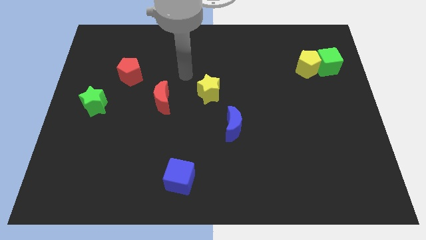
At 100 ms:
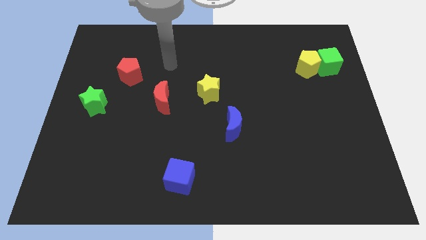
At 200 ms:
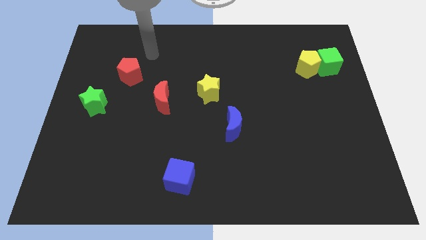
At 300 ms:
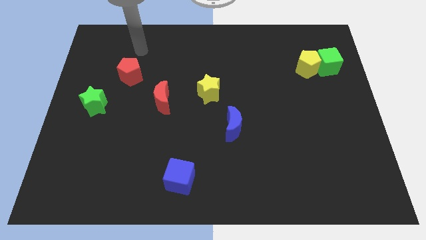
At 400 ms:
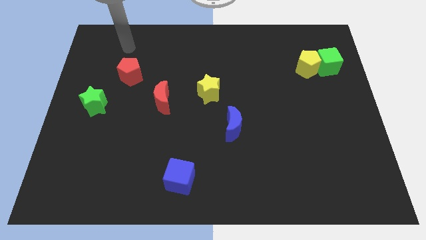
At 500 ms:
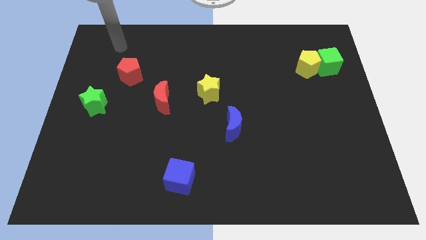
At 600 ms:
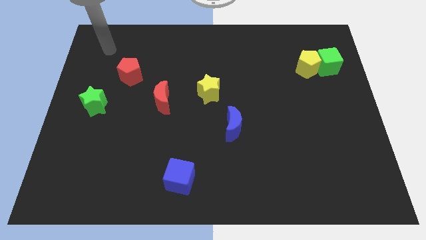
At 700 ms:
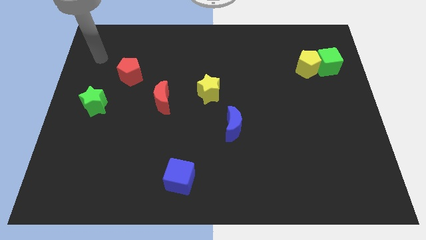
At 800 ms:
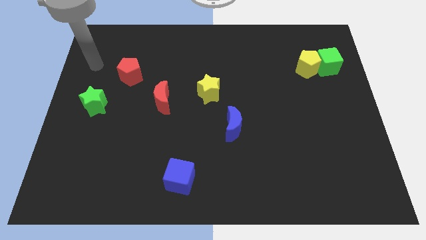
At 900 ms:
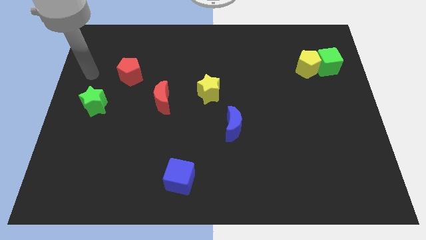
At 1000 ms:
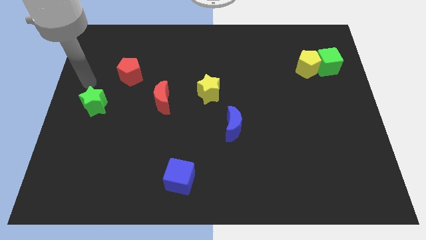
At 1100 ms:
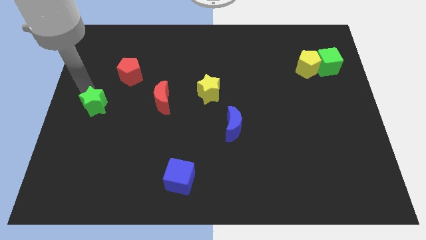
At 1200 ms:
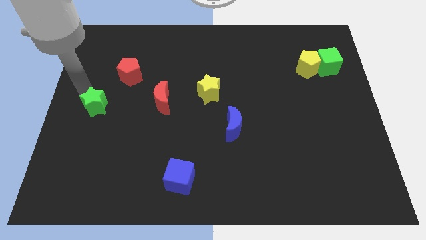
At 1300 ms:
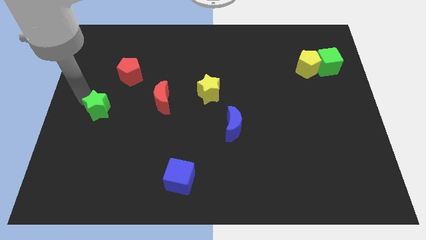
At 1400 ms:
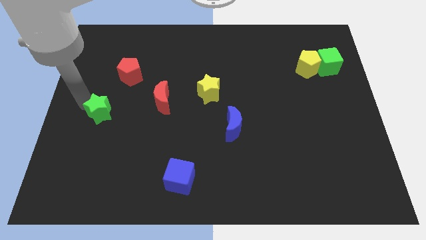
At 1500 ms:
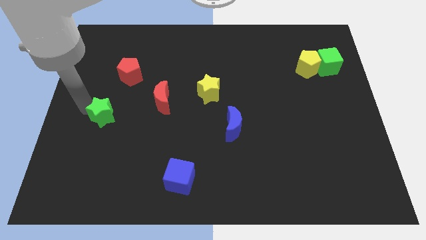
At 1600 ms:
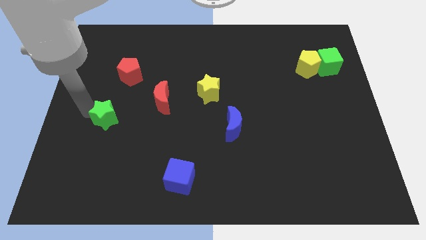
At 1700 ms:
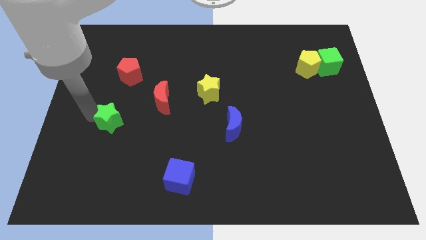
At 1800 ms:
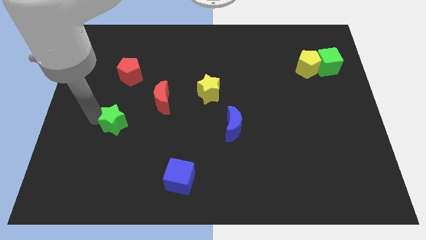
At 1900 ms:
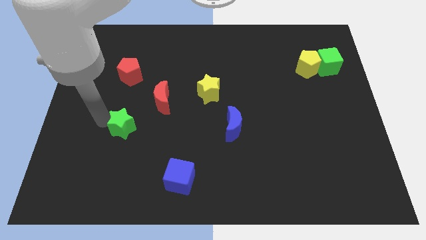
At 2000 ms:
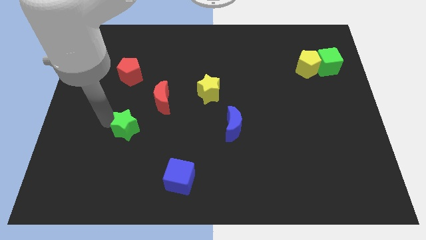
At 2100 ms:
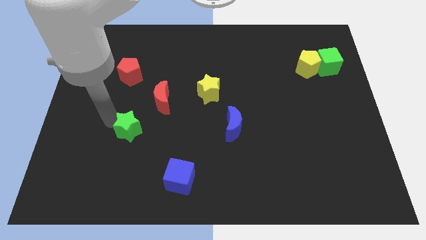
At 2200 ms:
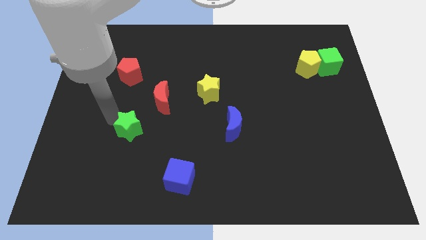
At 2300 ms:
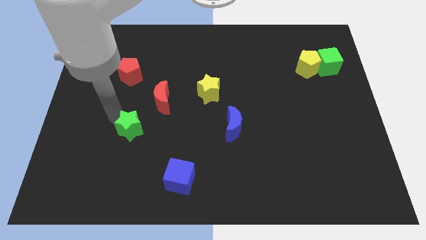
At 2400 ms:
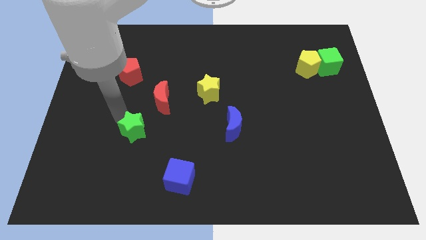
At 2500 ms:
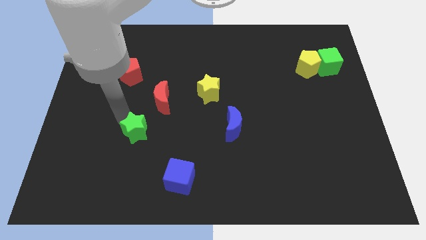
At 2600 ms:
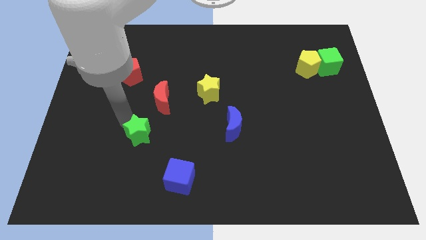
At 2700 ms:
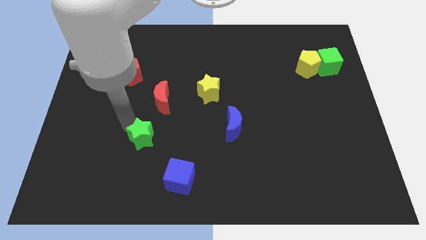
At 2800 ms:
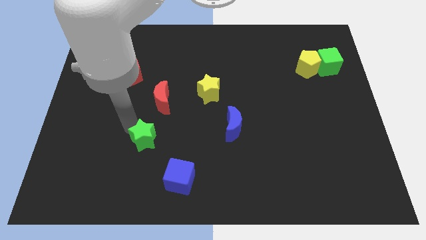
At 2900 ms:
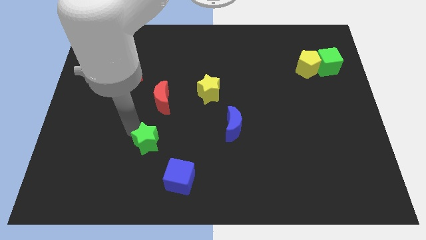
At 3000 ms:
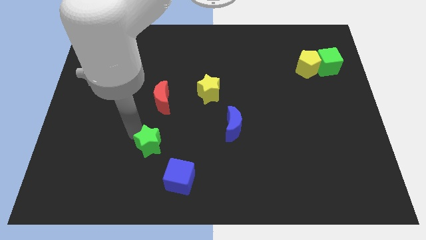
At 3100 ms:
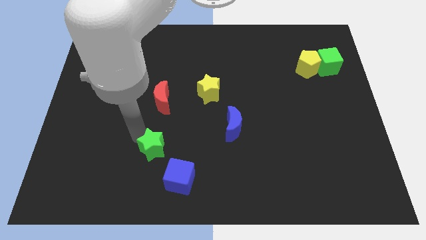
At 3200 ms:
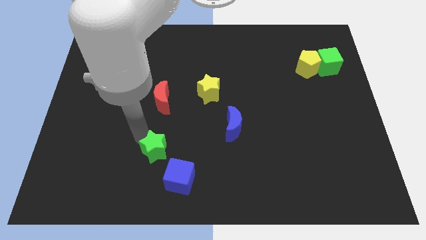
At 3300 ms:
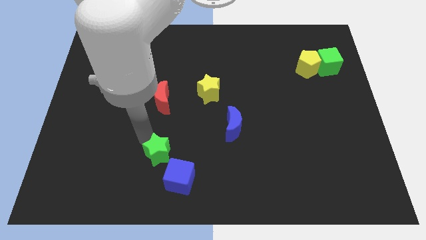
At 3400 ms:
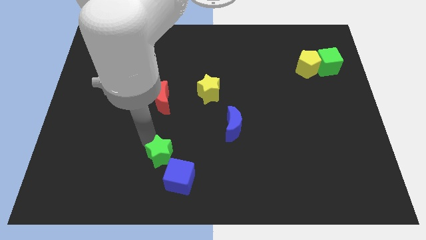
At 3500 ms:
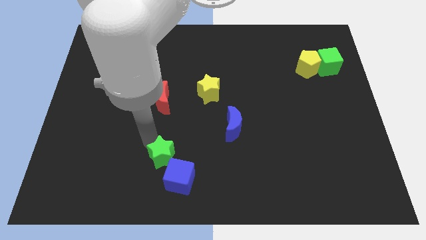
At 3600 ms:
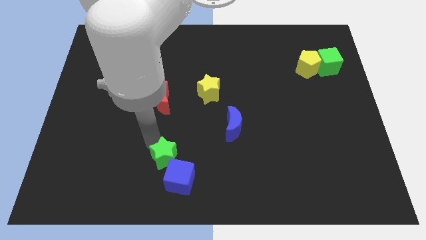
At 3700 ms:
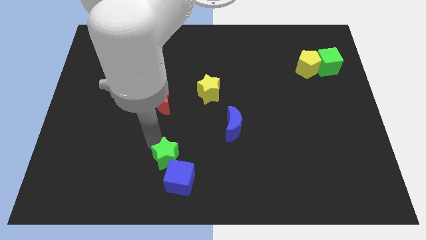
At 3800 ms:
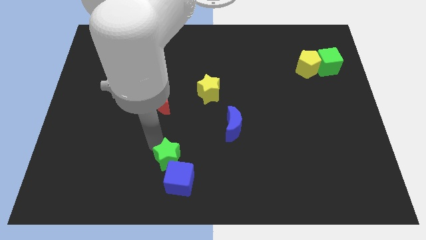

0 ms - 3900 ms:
push the green star to the blue cube

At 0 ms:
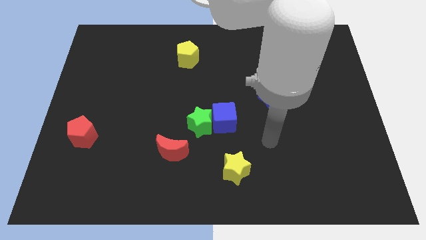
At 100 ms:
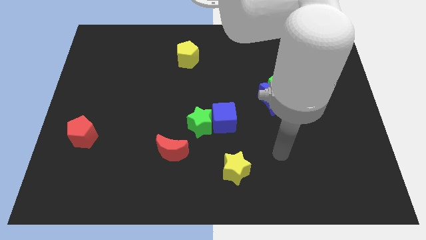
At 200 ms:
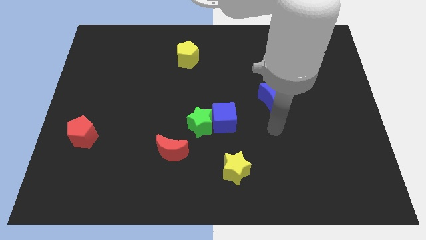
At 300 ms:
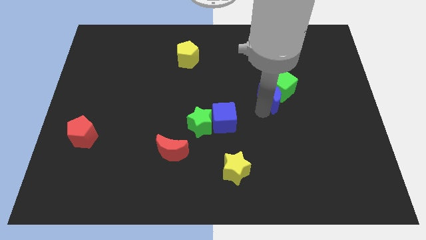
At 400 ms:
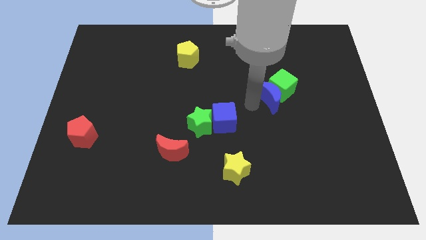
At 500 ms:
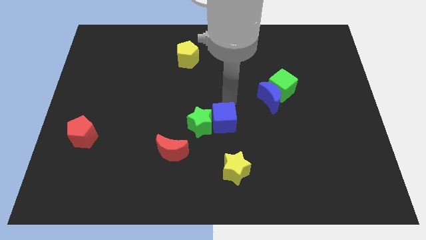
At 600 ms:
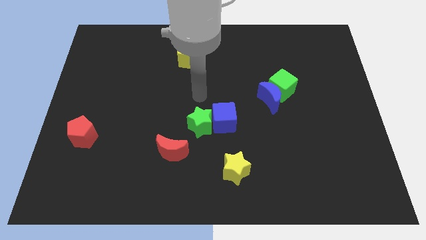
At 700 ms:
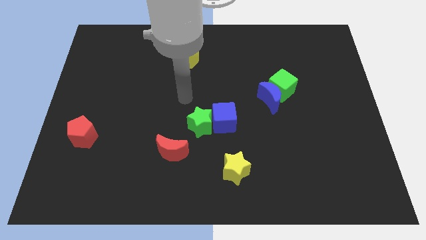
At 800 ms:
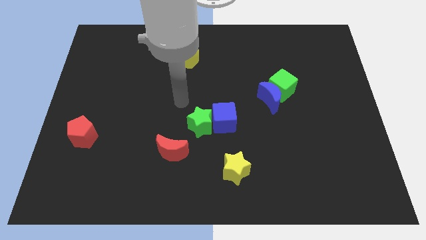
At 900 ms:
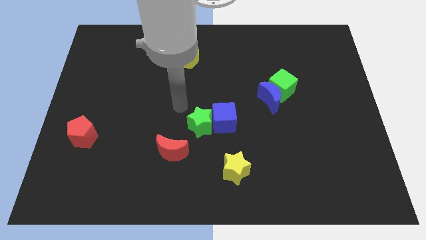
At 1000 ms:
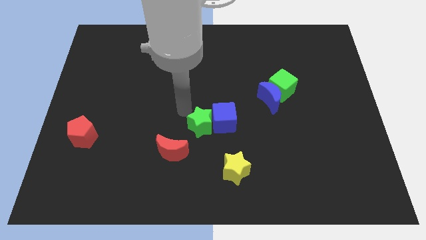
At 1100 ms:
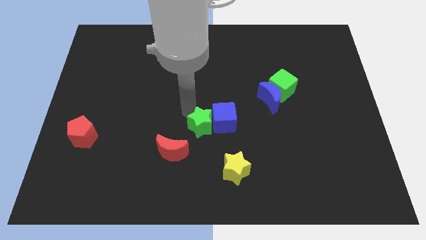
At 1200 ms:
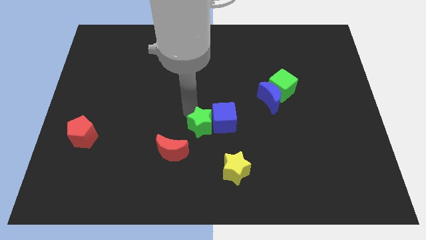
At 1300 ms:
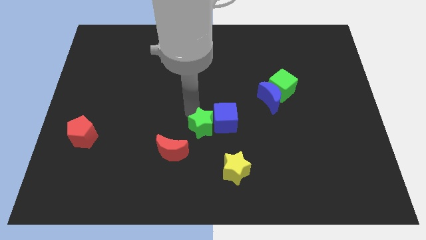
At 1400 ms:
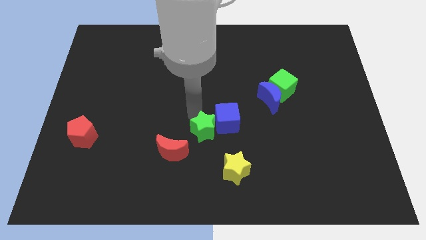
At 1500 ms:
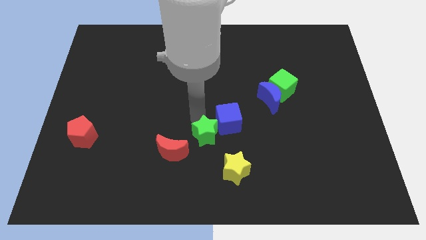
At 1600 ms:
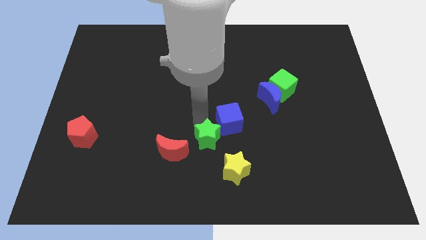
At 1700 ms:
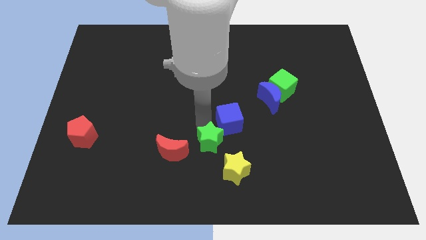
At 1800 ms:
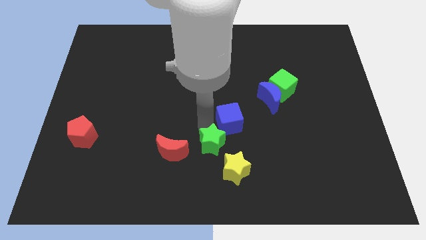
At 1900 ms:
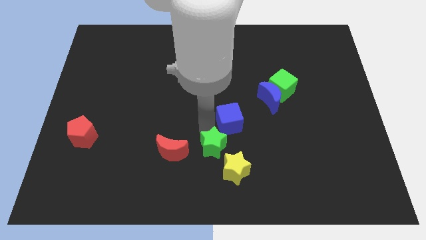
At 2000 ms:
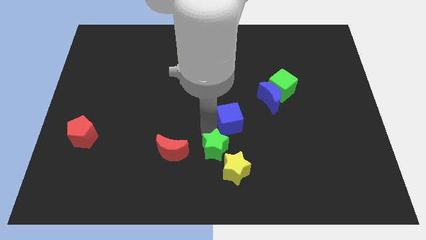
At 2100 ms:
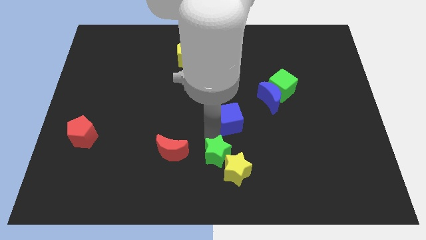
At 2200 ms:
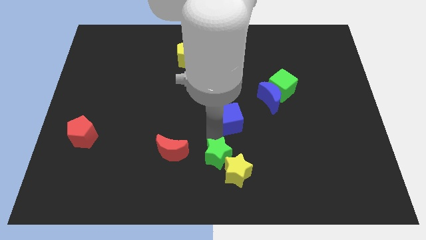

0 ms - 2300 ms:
move the green star to the yellow star

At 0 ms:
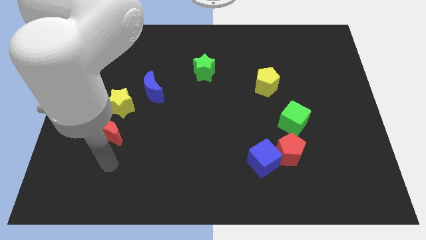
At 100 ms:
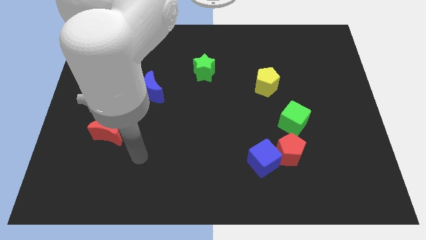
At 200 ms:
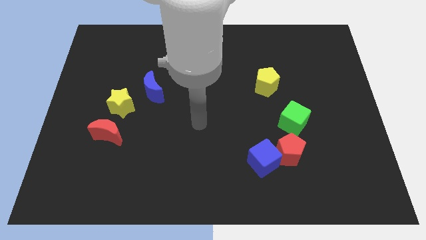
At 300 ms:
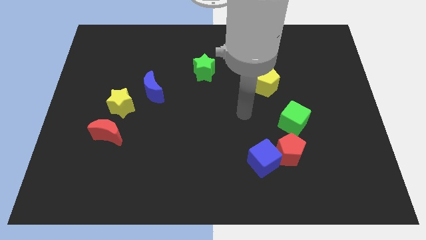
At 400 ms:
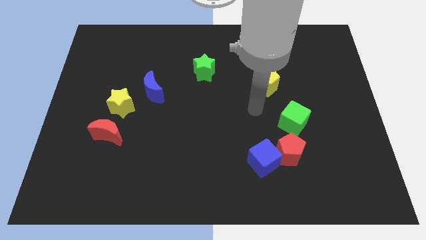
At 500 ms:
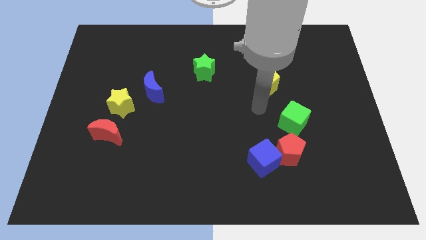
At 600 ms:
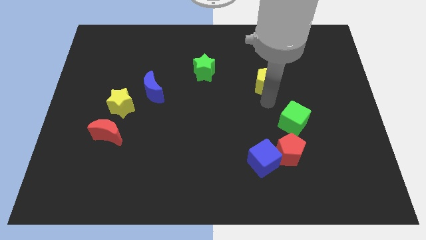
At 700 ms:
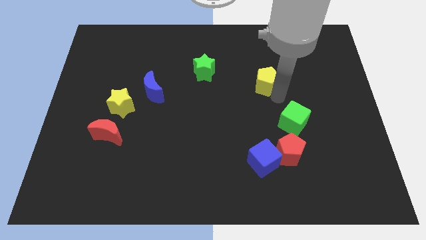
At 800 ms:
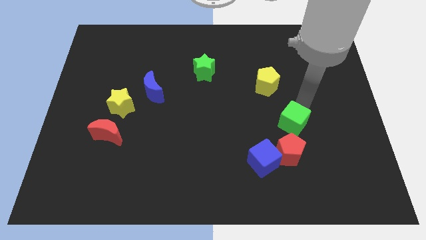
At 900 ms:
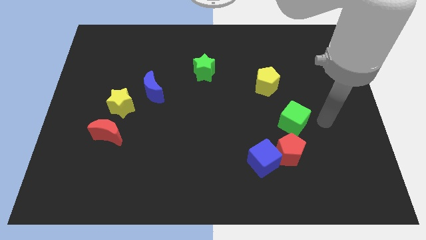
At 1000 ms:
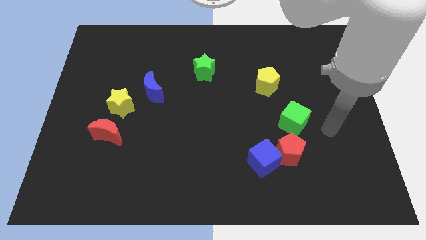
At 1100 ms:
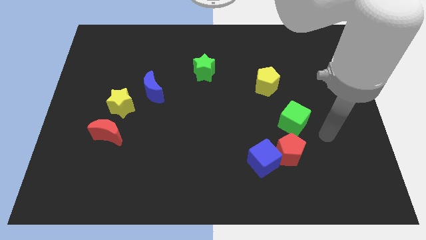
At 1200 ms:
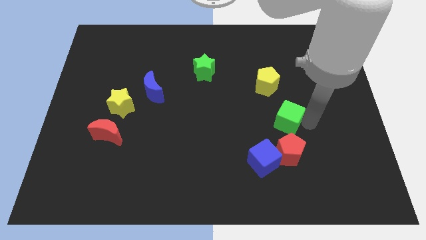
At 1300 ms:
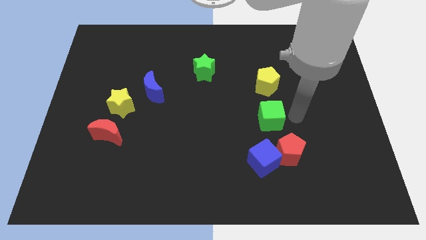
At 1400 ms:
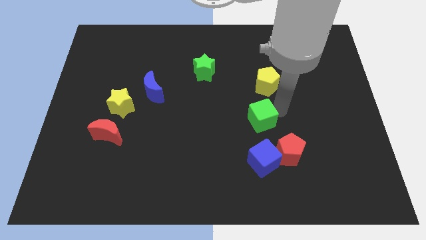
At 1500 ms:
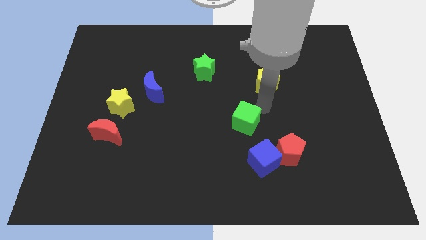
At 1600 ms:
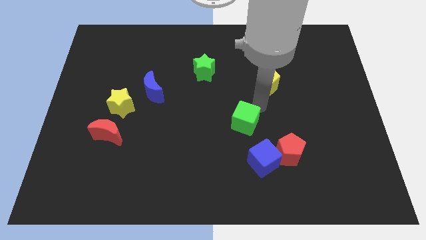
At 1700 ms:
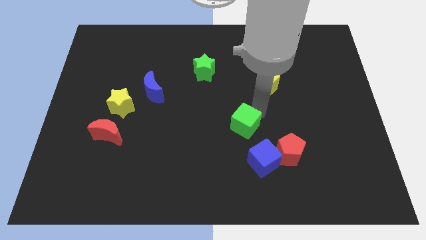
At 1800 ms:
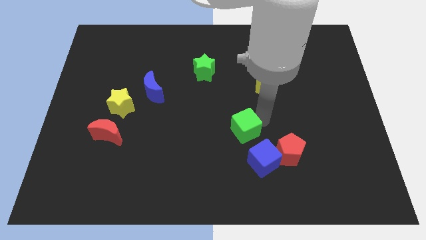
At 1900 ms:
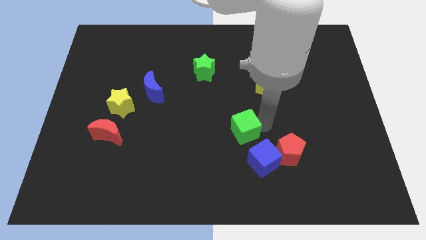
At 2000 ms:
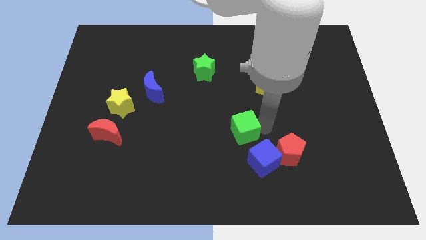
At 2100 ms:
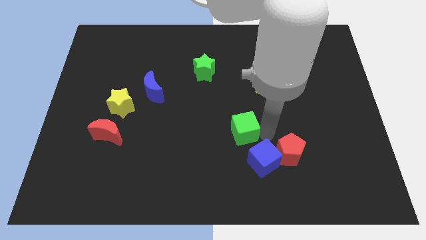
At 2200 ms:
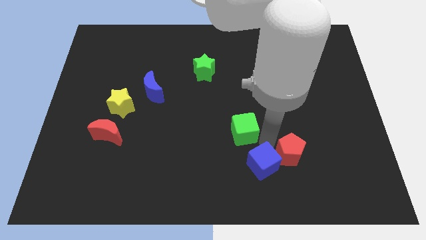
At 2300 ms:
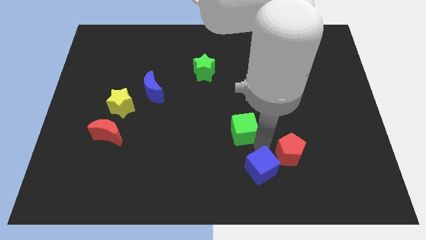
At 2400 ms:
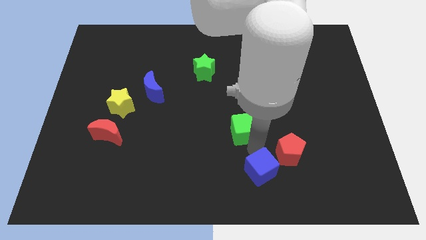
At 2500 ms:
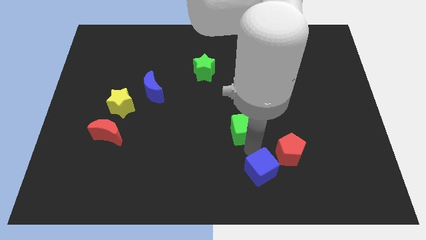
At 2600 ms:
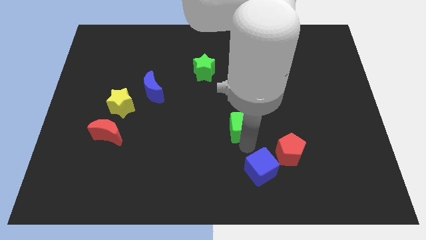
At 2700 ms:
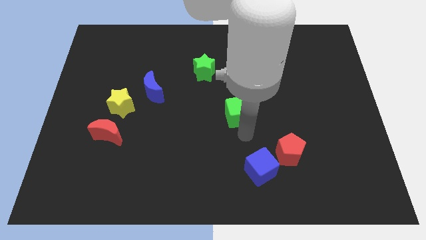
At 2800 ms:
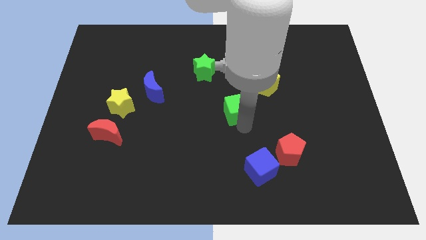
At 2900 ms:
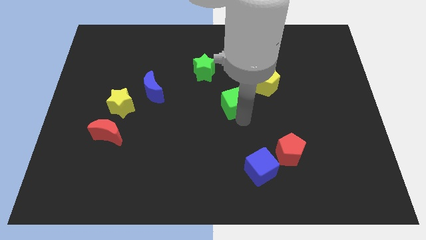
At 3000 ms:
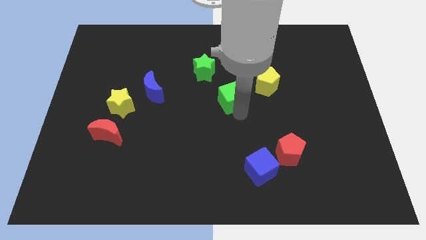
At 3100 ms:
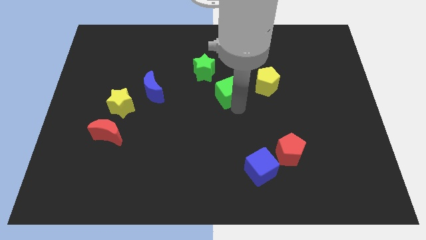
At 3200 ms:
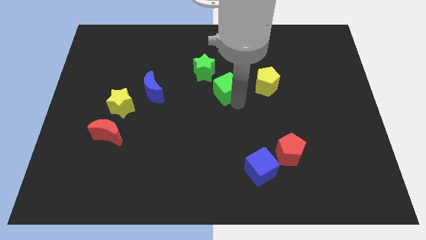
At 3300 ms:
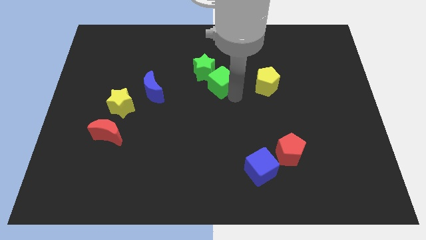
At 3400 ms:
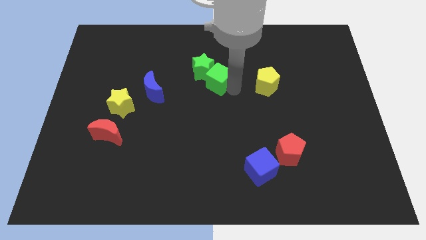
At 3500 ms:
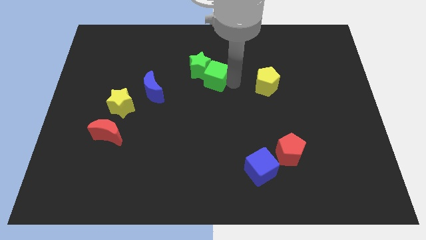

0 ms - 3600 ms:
put the green cube next to the green star
